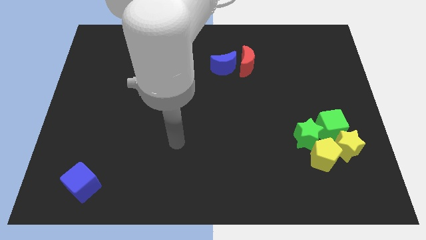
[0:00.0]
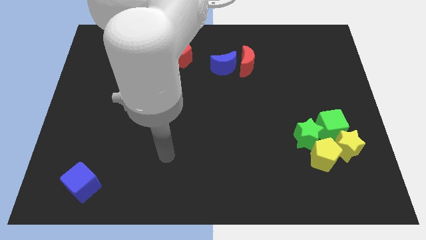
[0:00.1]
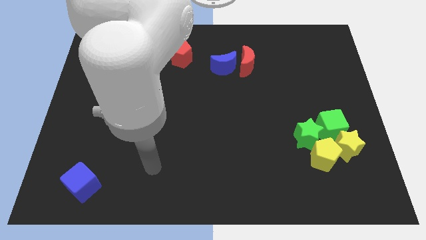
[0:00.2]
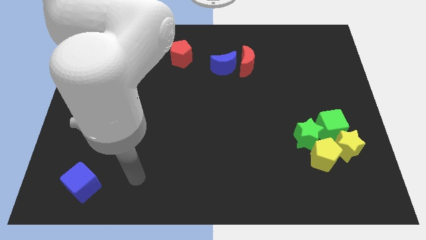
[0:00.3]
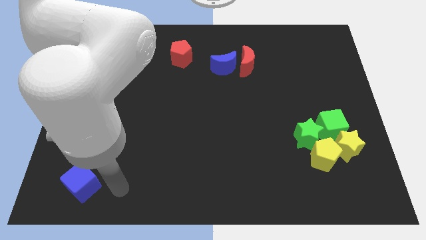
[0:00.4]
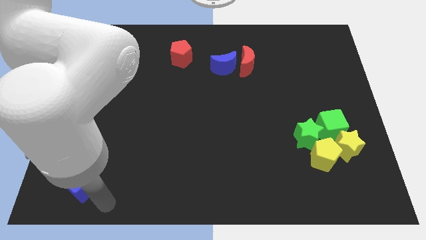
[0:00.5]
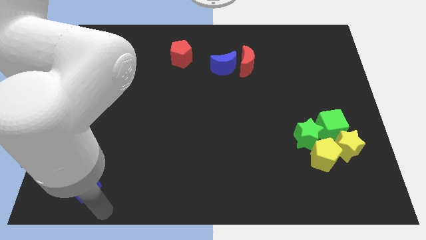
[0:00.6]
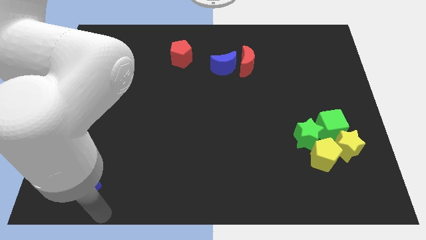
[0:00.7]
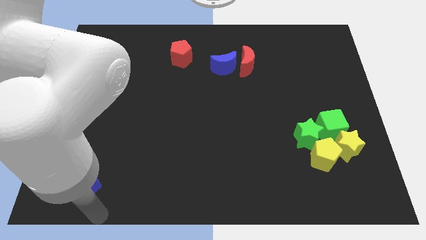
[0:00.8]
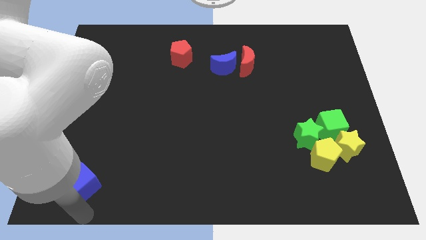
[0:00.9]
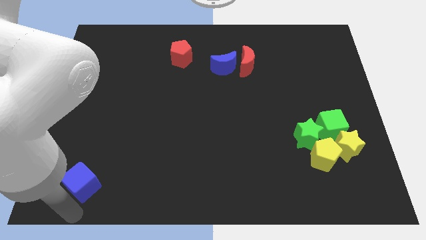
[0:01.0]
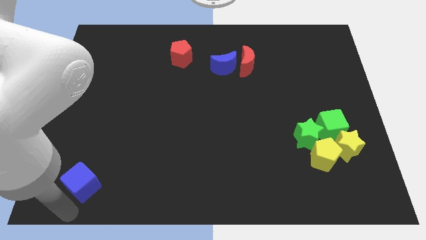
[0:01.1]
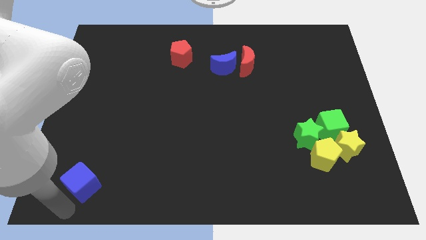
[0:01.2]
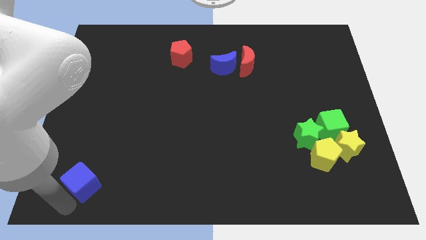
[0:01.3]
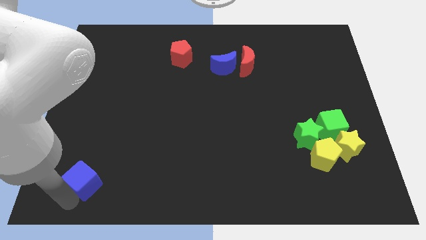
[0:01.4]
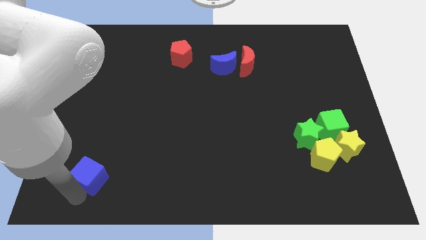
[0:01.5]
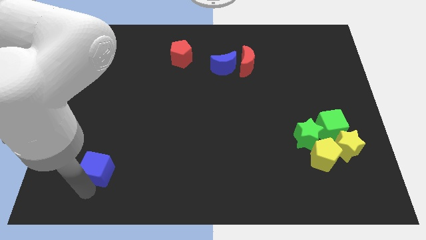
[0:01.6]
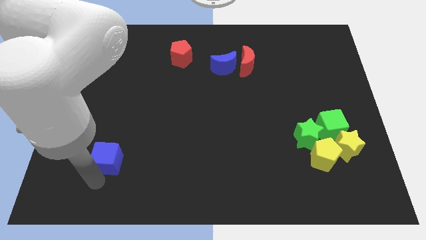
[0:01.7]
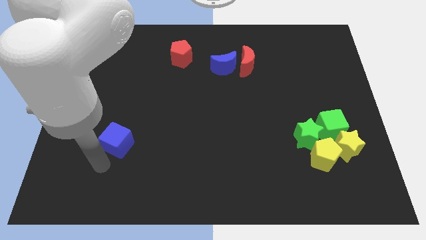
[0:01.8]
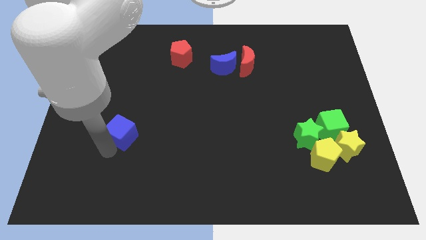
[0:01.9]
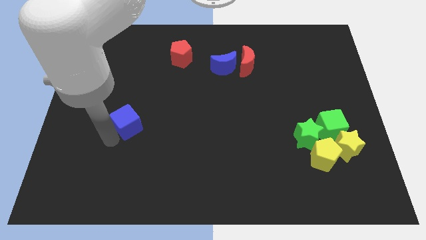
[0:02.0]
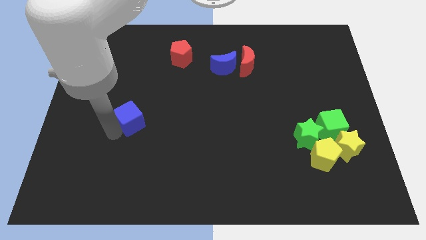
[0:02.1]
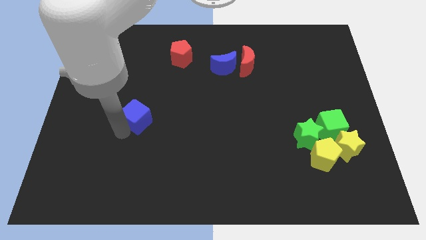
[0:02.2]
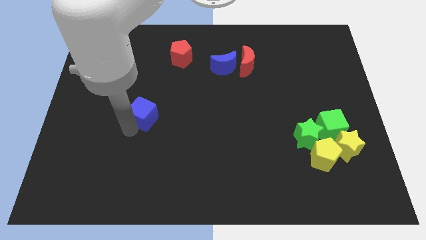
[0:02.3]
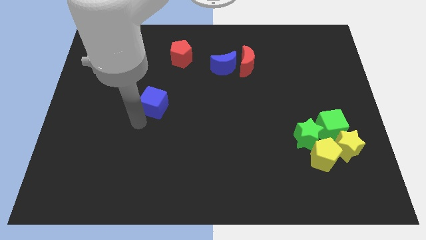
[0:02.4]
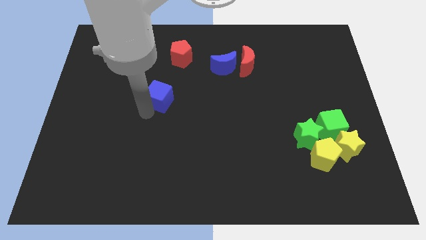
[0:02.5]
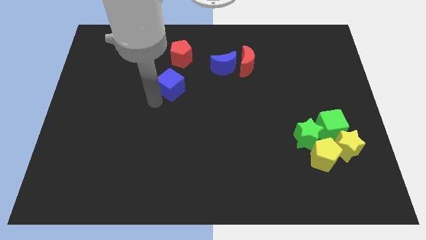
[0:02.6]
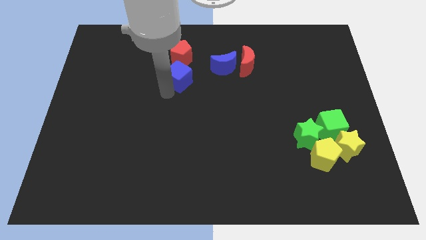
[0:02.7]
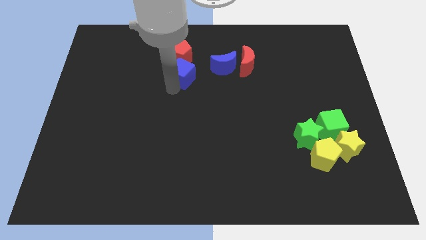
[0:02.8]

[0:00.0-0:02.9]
move the blue cube down to the red pentagon

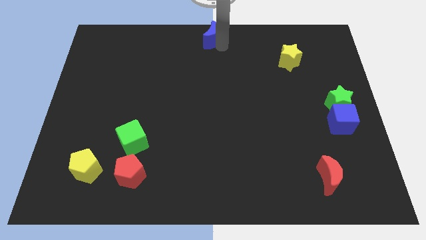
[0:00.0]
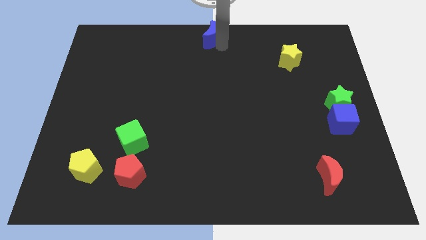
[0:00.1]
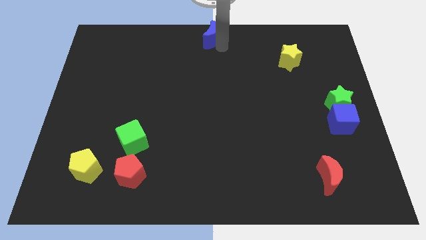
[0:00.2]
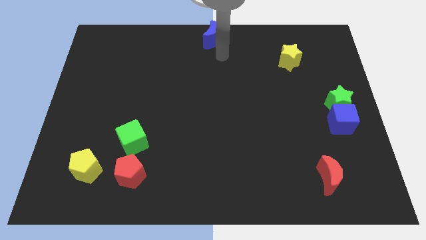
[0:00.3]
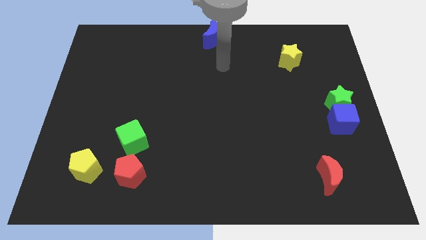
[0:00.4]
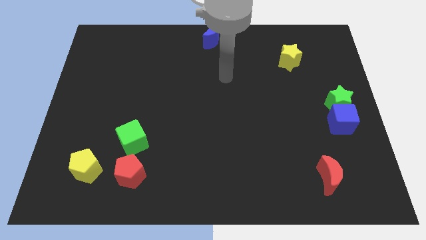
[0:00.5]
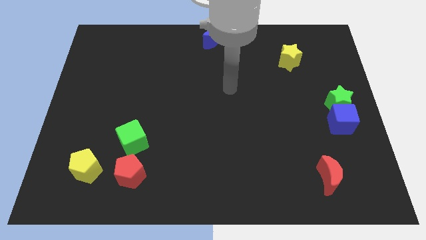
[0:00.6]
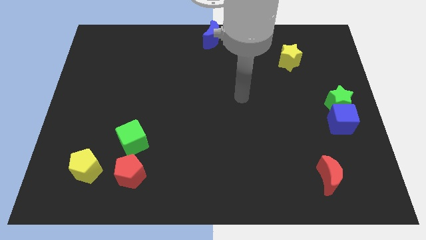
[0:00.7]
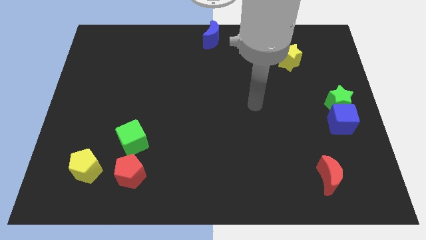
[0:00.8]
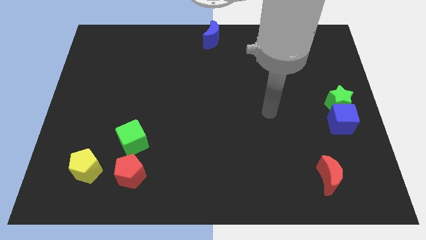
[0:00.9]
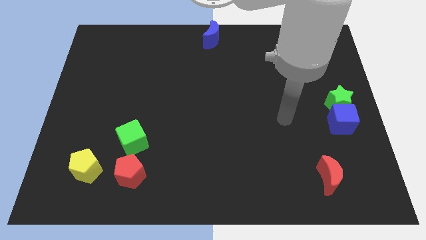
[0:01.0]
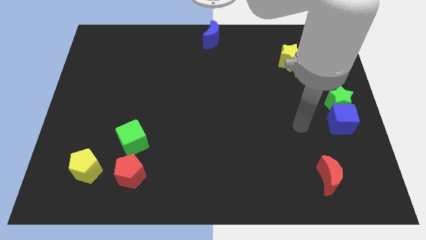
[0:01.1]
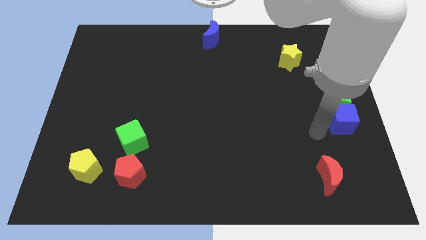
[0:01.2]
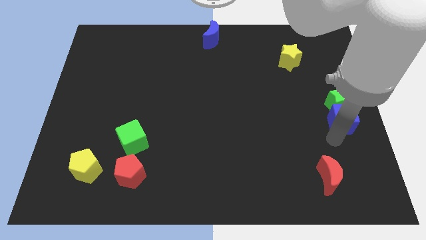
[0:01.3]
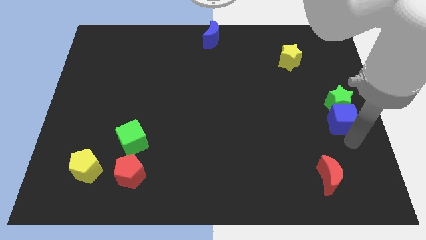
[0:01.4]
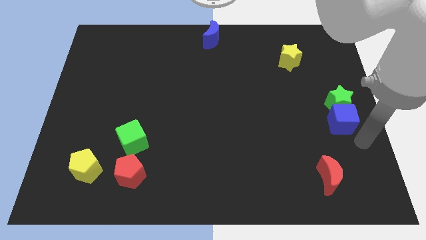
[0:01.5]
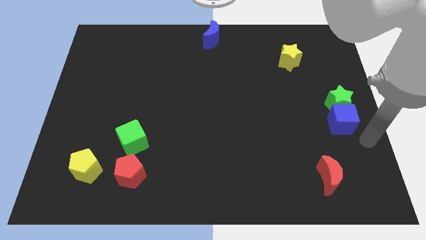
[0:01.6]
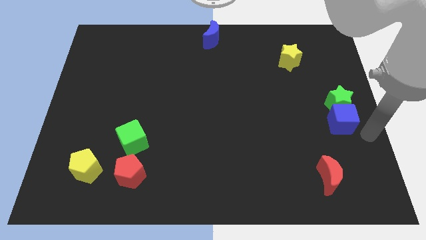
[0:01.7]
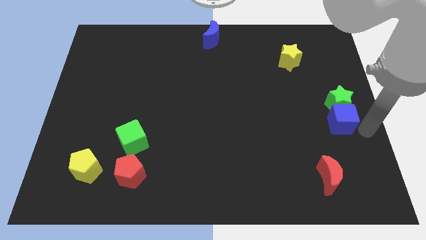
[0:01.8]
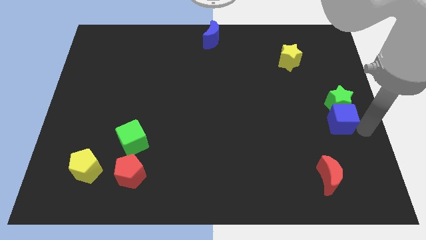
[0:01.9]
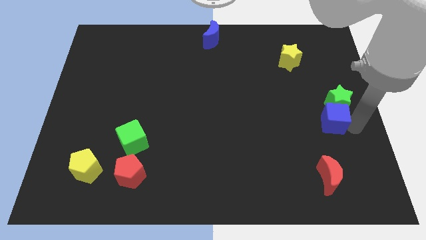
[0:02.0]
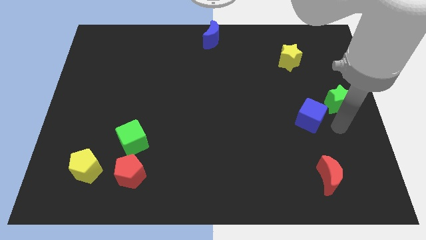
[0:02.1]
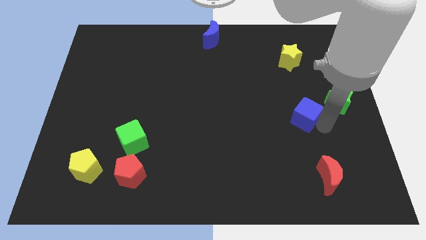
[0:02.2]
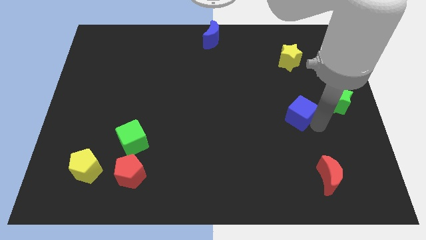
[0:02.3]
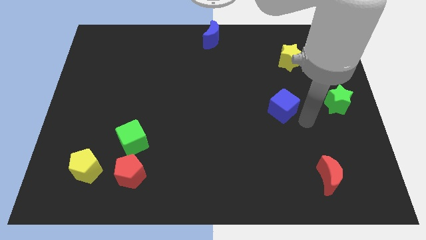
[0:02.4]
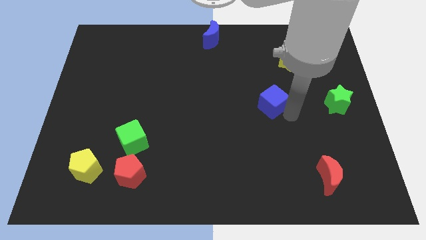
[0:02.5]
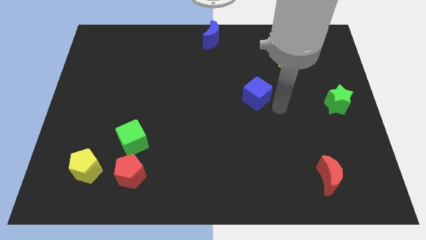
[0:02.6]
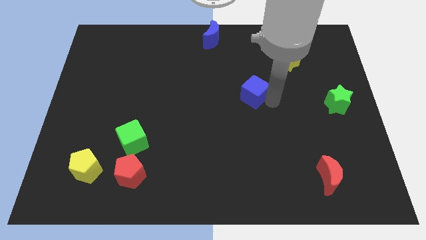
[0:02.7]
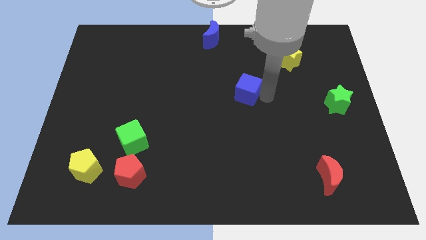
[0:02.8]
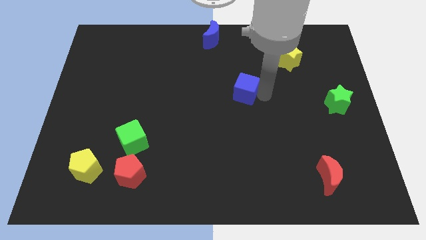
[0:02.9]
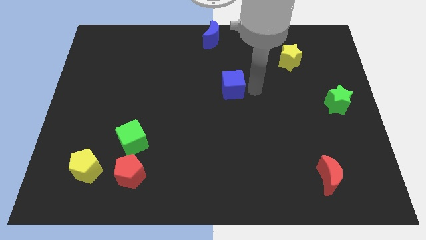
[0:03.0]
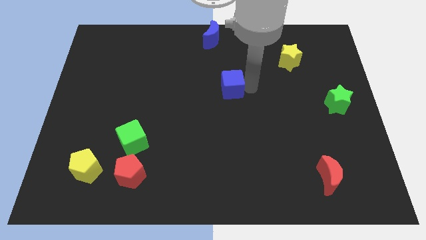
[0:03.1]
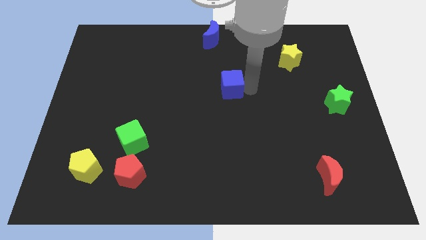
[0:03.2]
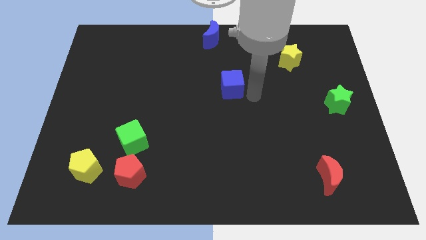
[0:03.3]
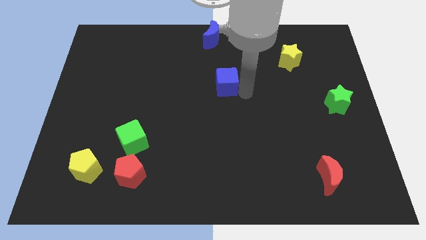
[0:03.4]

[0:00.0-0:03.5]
move your arm away from the blue moon

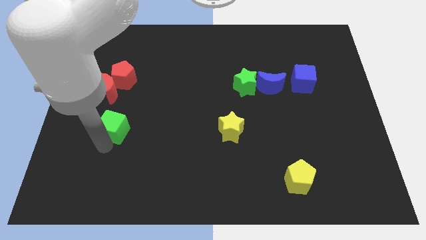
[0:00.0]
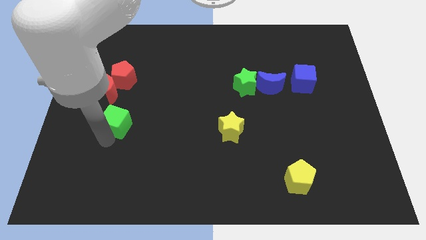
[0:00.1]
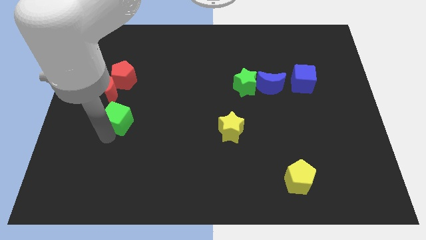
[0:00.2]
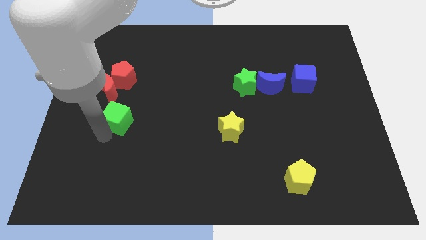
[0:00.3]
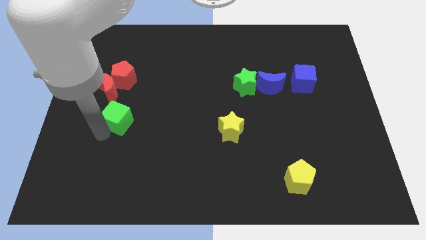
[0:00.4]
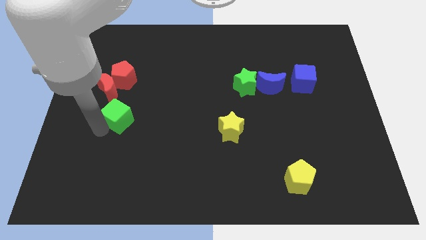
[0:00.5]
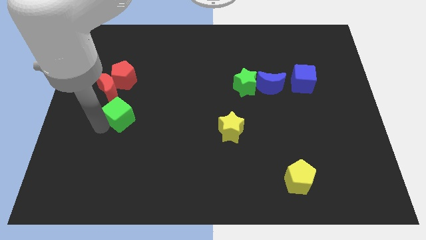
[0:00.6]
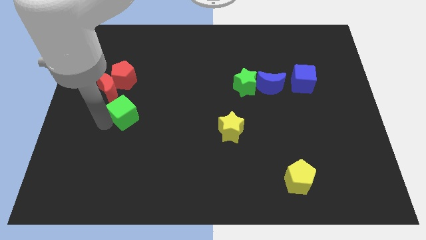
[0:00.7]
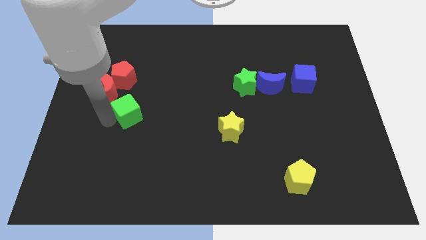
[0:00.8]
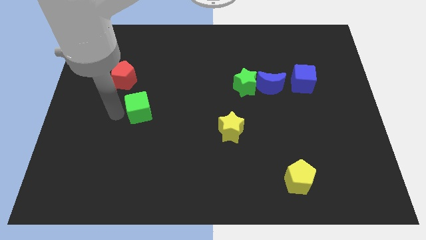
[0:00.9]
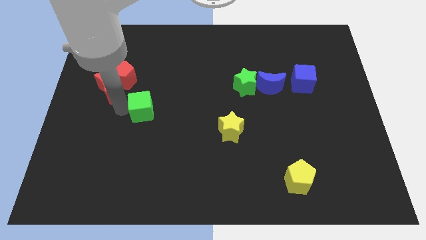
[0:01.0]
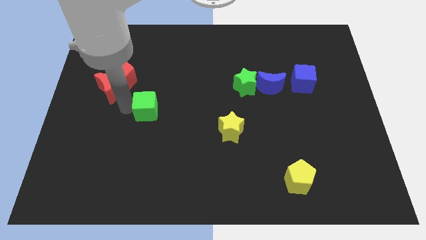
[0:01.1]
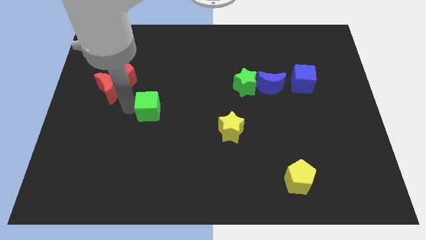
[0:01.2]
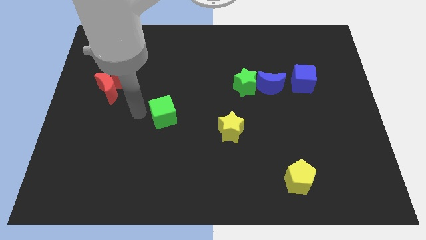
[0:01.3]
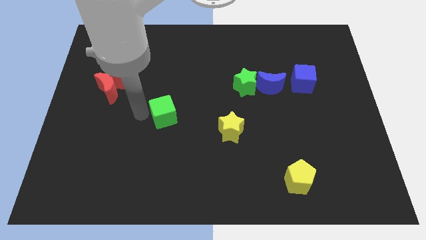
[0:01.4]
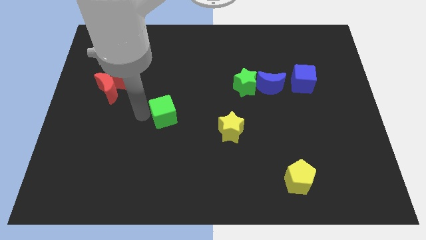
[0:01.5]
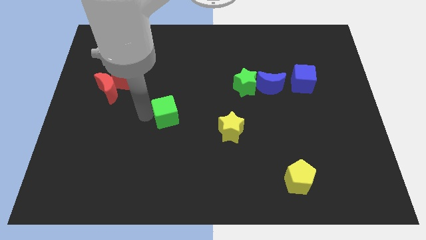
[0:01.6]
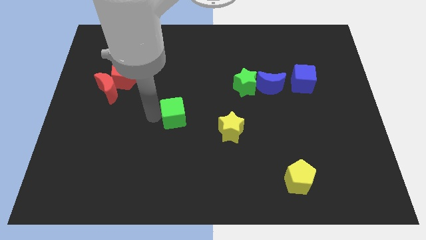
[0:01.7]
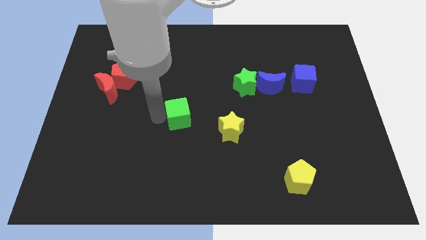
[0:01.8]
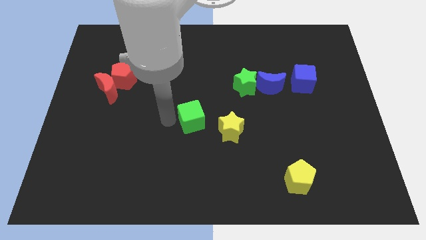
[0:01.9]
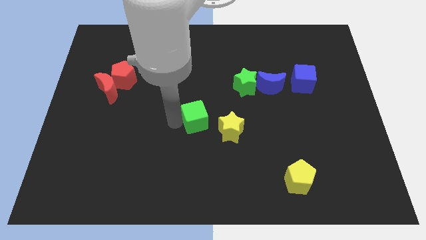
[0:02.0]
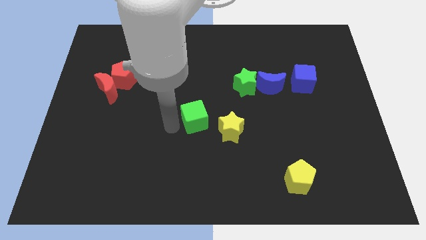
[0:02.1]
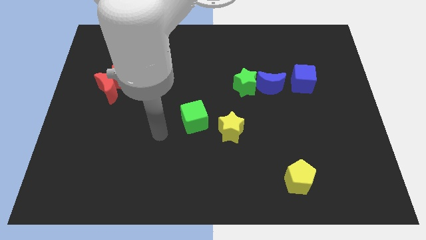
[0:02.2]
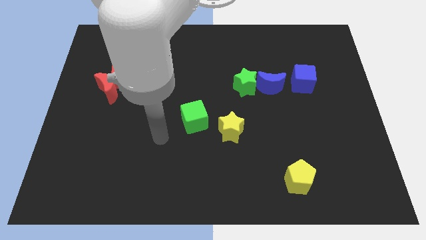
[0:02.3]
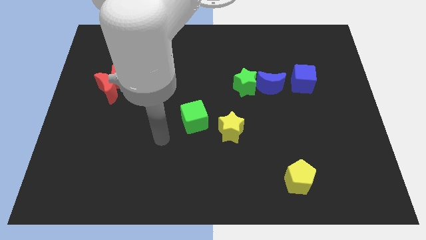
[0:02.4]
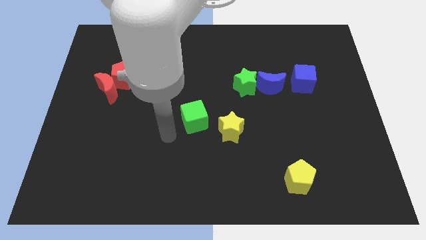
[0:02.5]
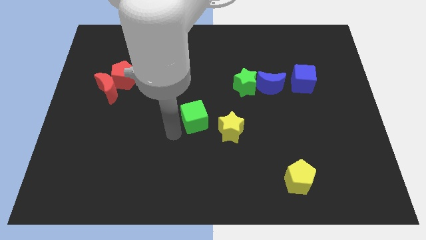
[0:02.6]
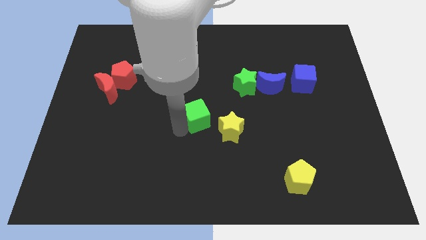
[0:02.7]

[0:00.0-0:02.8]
place green cube to the center of the board
